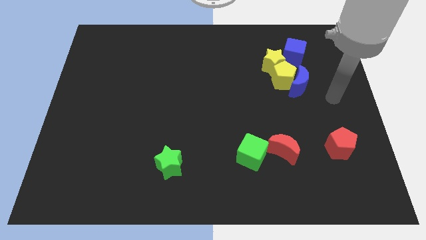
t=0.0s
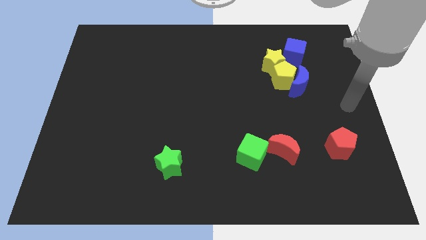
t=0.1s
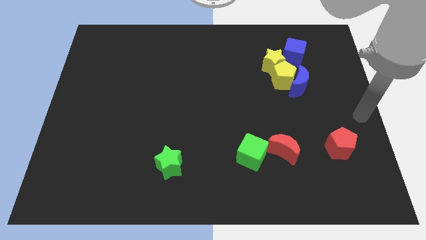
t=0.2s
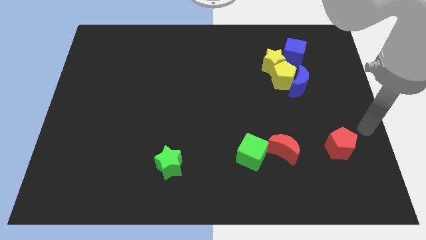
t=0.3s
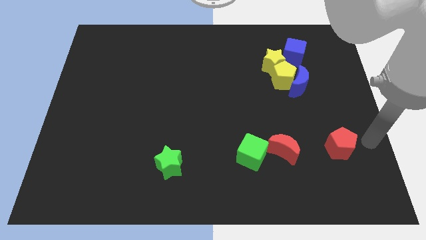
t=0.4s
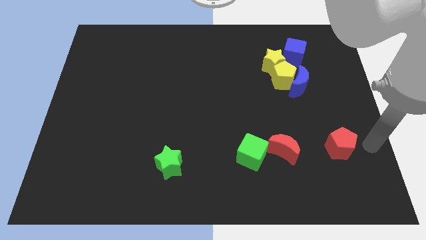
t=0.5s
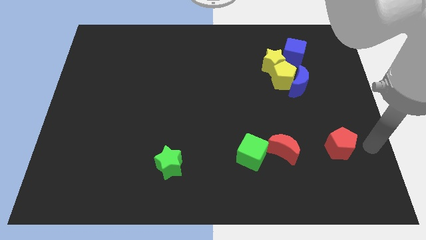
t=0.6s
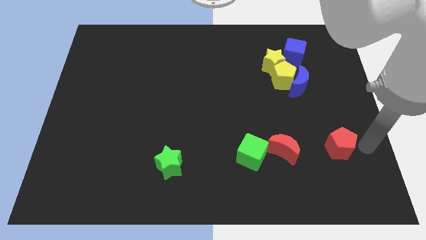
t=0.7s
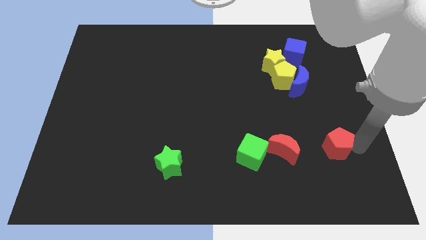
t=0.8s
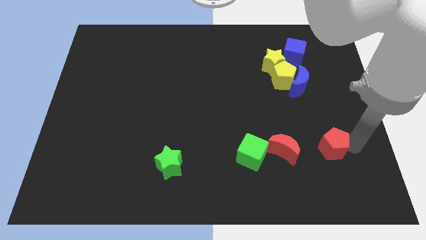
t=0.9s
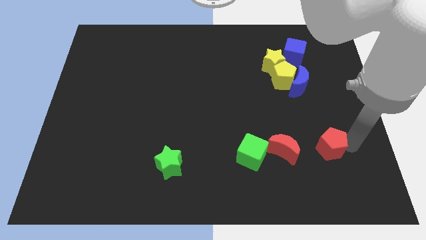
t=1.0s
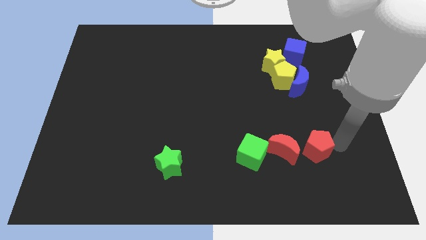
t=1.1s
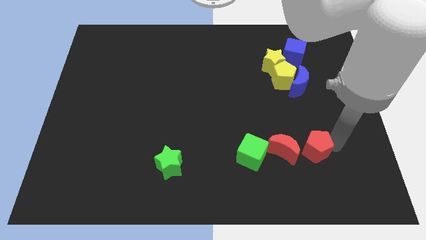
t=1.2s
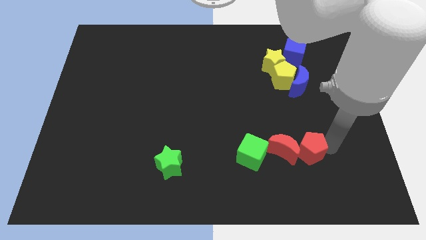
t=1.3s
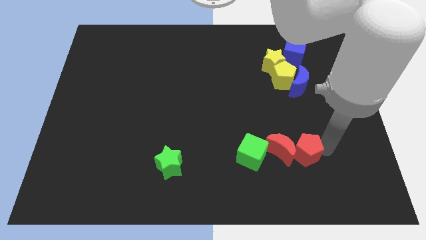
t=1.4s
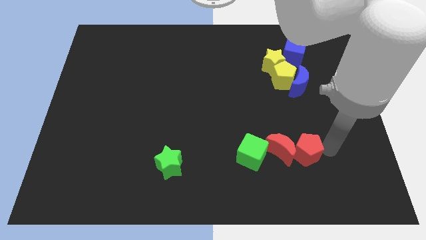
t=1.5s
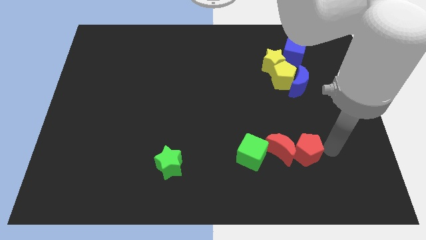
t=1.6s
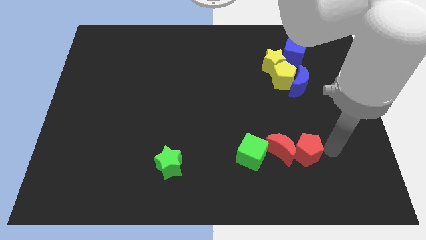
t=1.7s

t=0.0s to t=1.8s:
drag the red pentagon to the right side red crescent

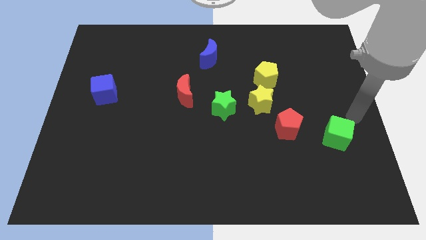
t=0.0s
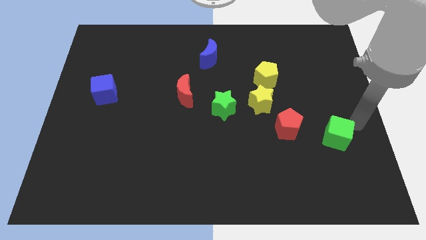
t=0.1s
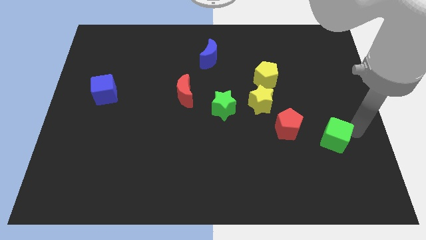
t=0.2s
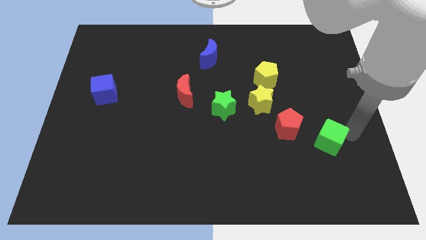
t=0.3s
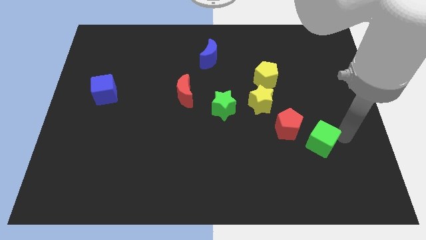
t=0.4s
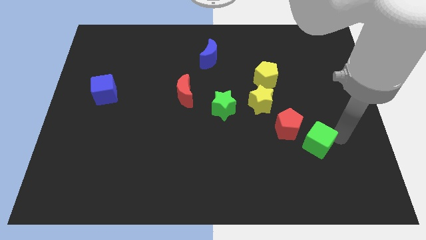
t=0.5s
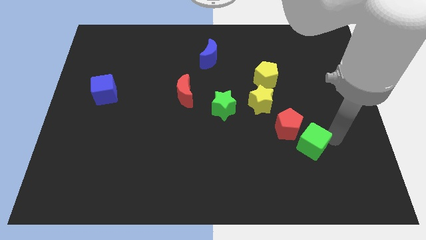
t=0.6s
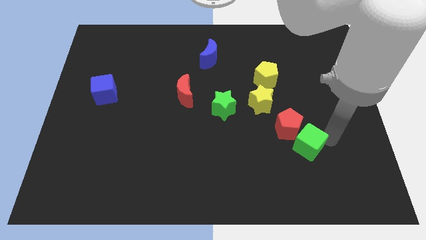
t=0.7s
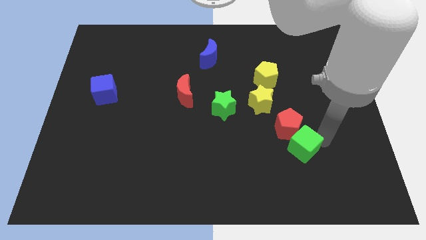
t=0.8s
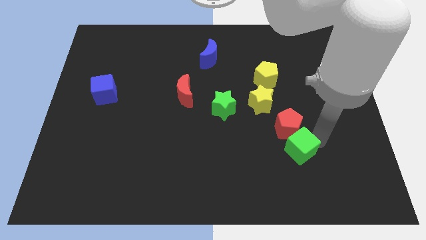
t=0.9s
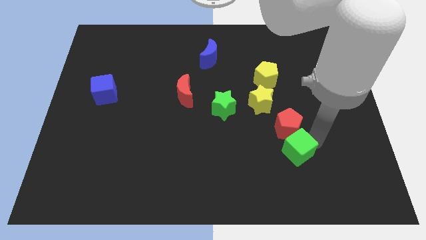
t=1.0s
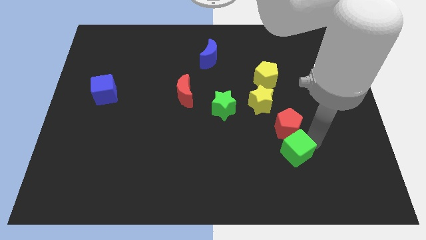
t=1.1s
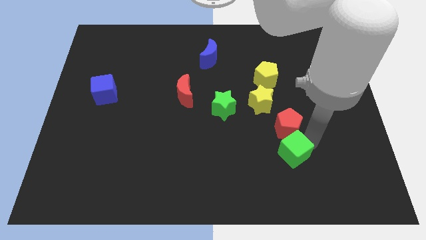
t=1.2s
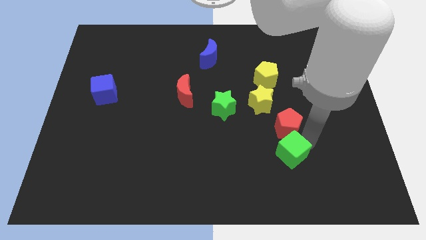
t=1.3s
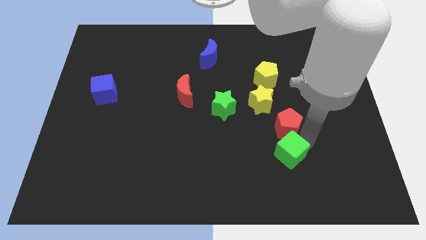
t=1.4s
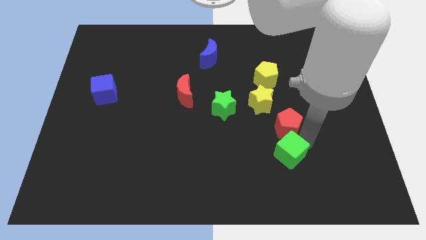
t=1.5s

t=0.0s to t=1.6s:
push the green cube to the bottom of the red pentagon

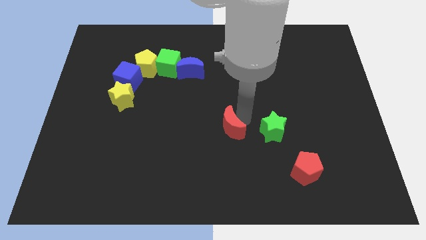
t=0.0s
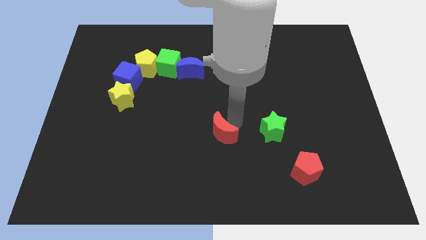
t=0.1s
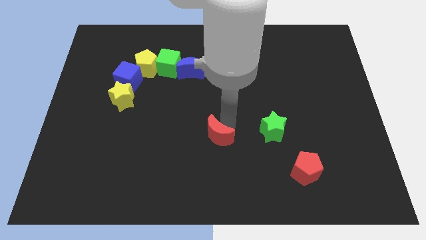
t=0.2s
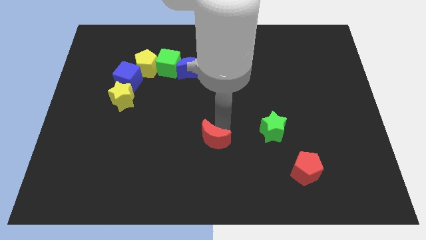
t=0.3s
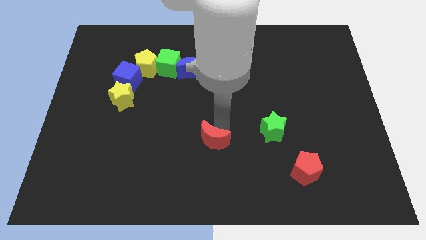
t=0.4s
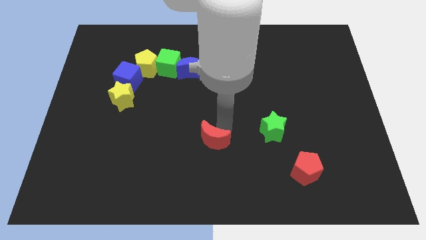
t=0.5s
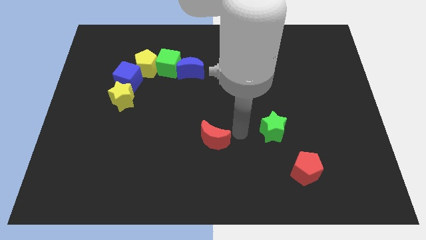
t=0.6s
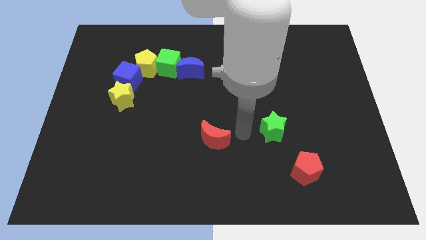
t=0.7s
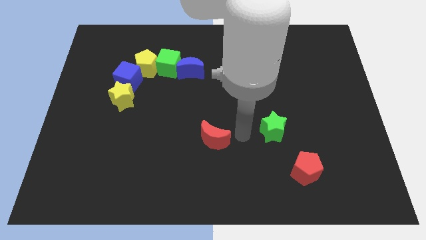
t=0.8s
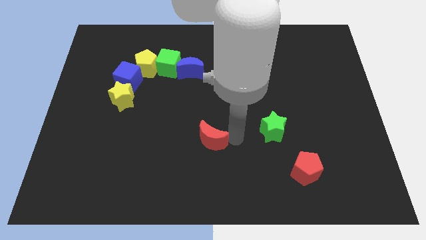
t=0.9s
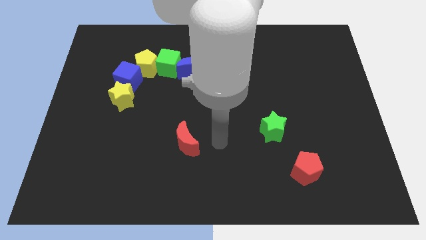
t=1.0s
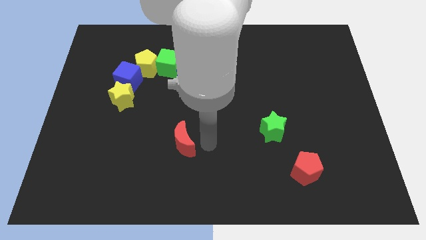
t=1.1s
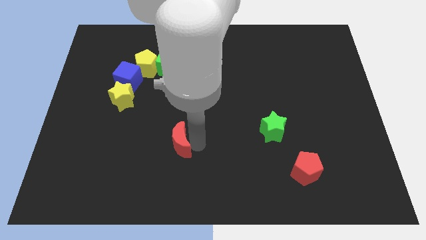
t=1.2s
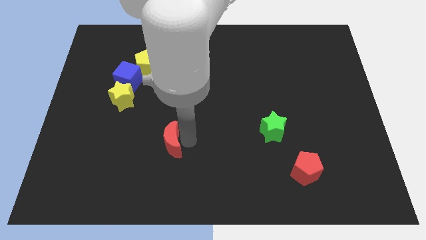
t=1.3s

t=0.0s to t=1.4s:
move the red moon slightly to the bottom of the board

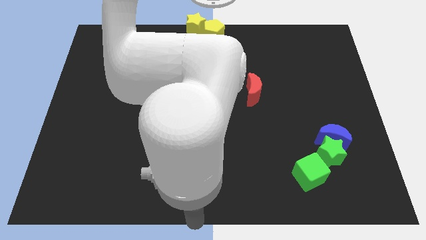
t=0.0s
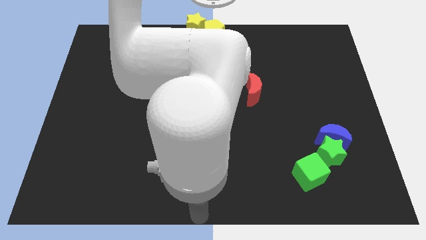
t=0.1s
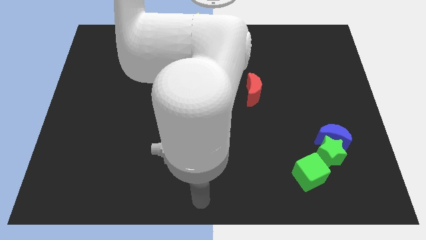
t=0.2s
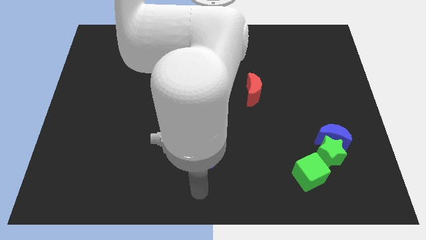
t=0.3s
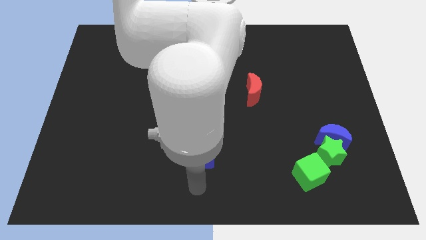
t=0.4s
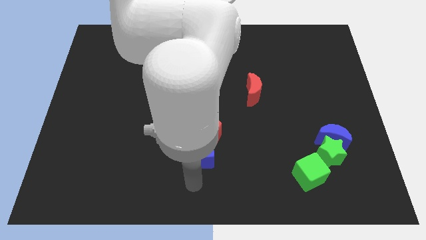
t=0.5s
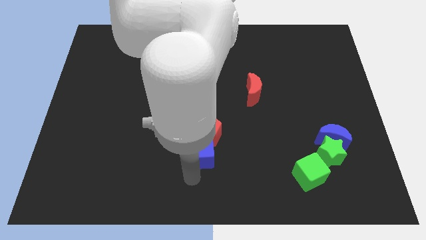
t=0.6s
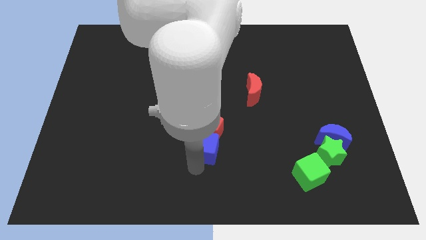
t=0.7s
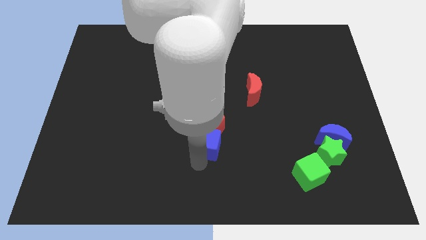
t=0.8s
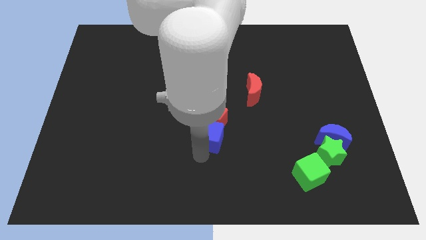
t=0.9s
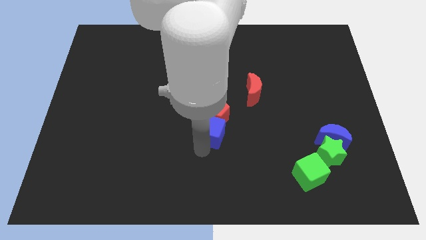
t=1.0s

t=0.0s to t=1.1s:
move your arm to the bottom side of blue cube

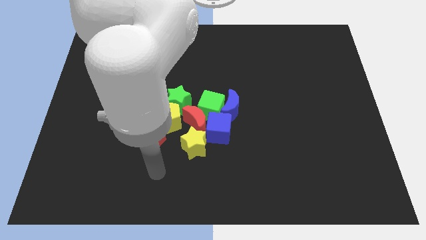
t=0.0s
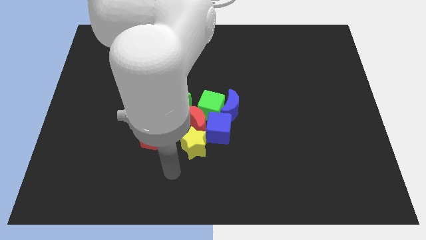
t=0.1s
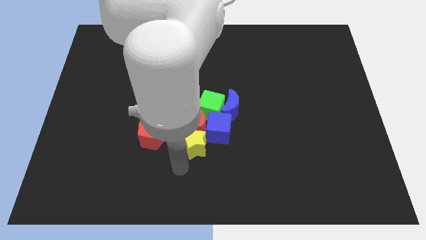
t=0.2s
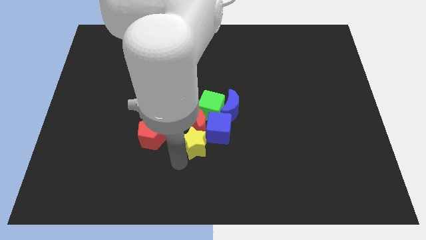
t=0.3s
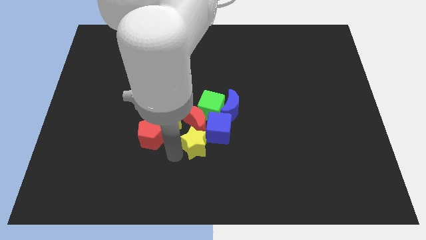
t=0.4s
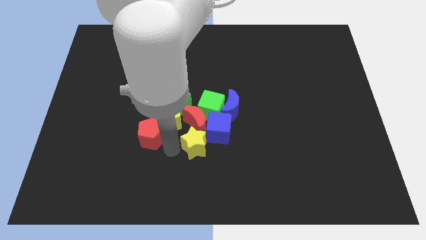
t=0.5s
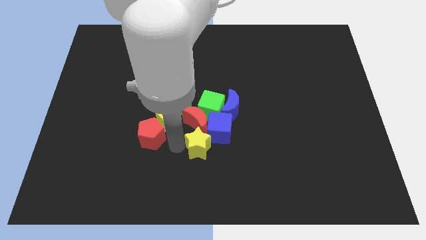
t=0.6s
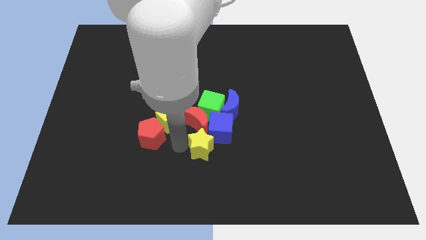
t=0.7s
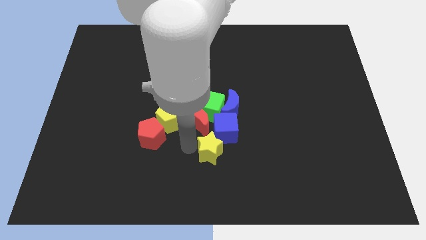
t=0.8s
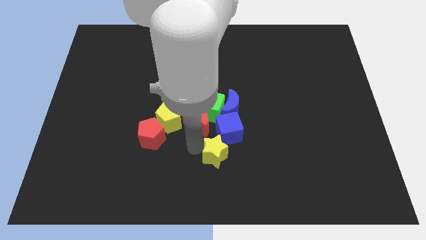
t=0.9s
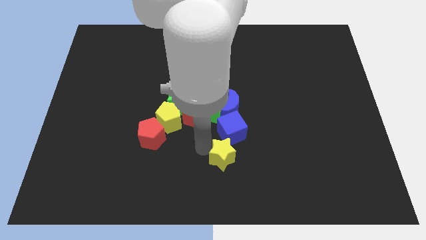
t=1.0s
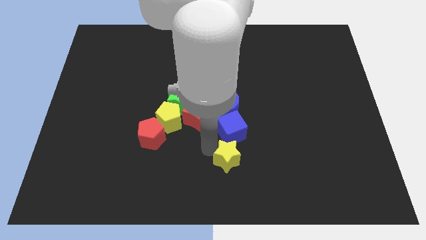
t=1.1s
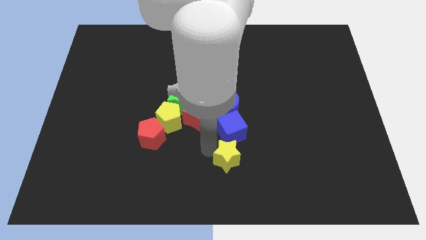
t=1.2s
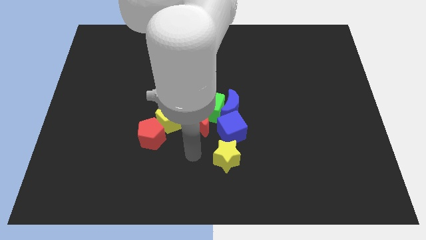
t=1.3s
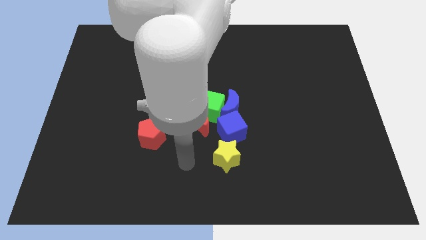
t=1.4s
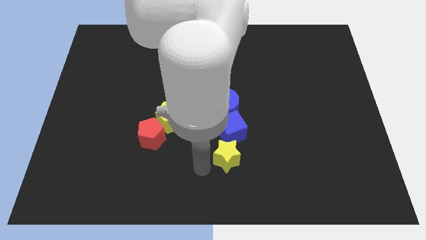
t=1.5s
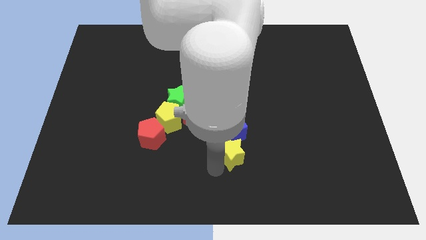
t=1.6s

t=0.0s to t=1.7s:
move the yellow star slightly to the right

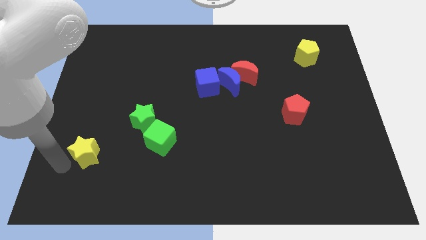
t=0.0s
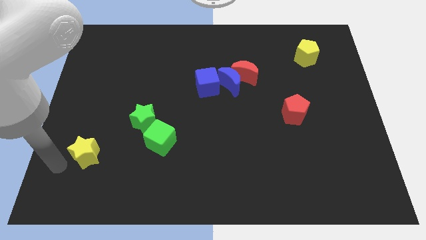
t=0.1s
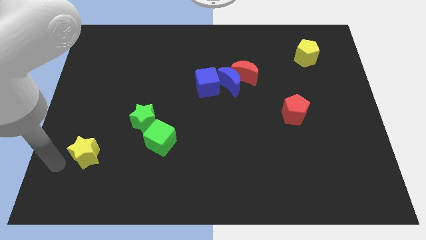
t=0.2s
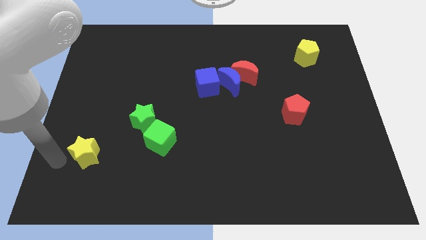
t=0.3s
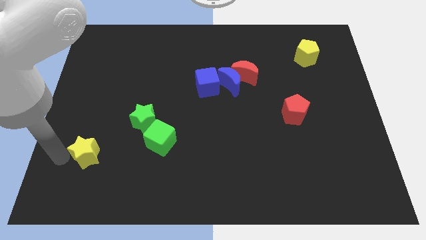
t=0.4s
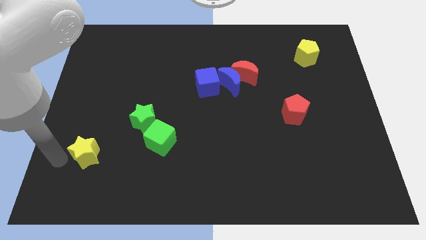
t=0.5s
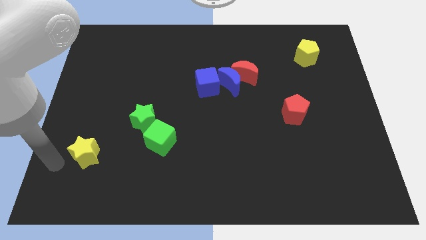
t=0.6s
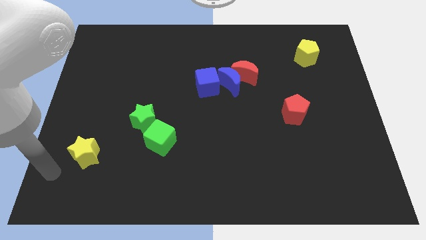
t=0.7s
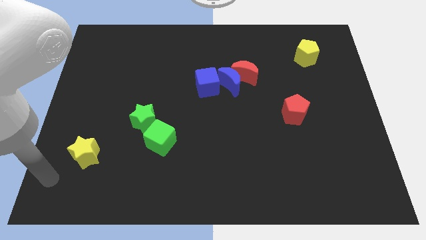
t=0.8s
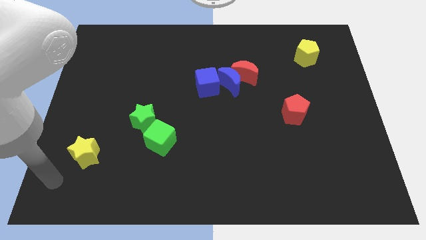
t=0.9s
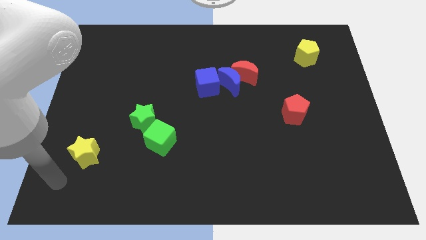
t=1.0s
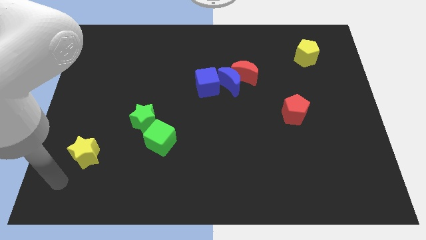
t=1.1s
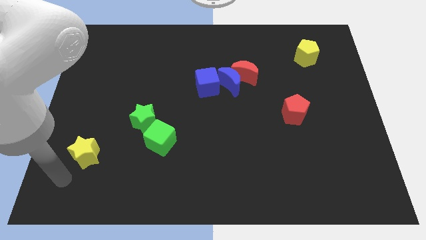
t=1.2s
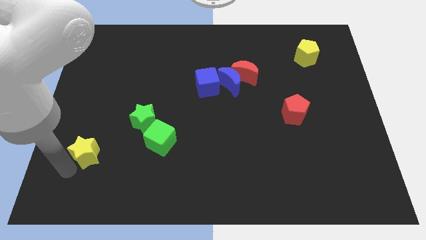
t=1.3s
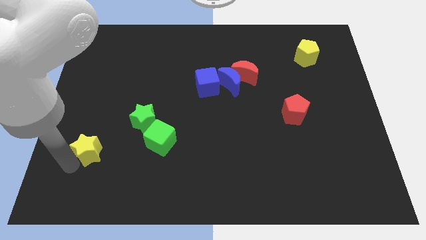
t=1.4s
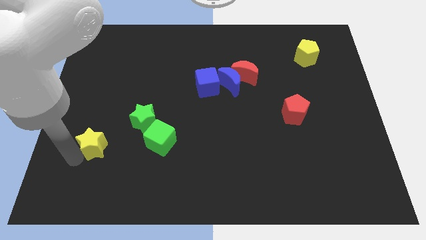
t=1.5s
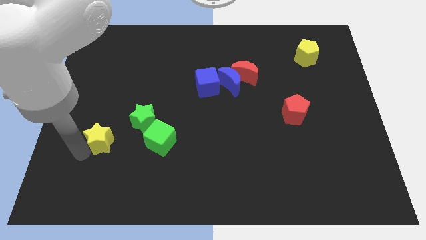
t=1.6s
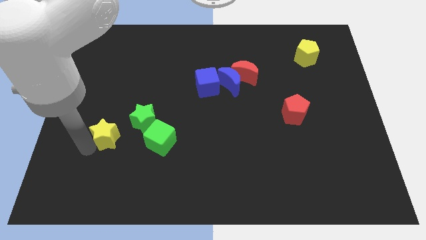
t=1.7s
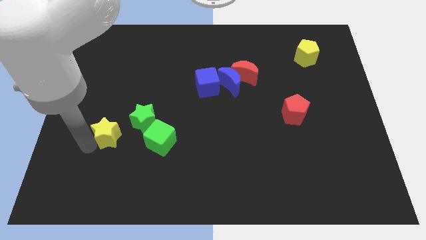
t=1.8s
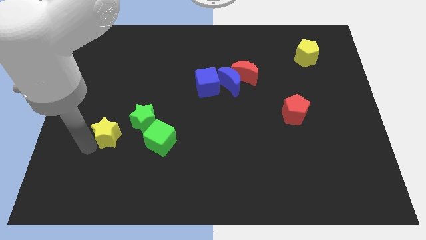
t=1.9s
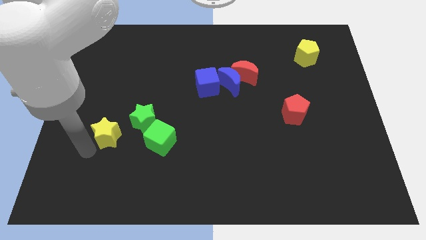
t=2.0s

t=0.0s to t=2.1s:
place the yellow star diagonally bottom left to green star
